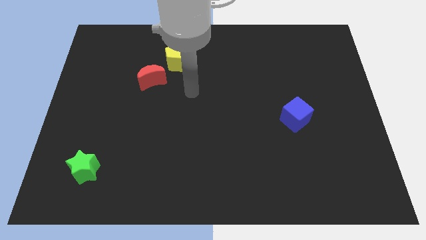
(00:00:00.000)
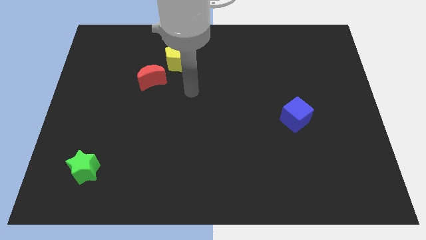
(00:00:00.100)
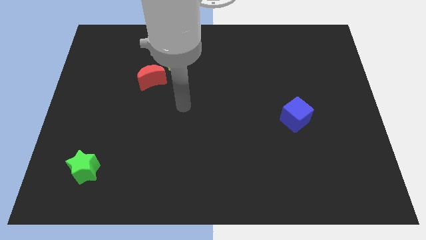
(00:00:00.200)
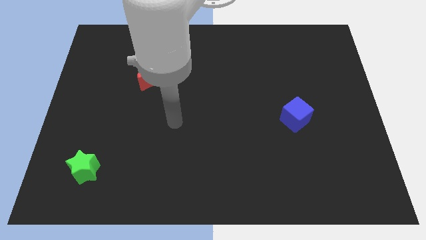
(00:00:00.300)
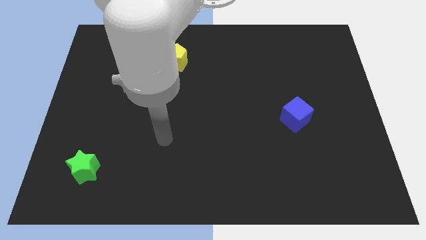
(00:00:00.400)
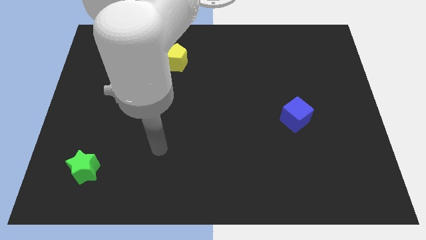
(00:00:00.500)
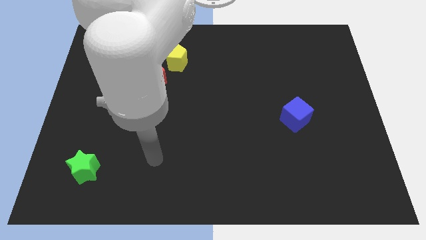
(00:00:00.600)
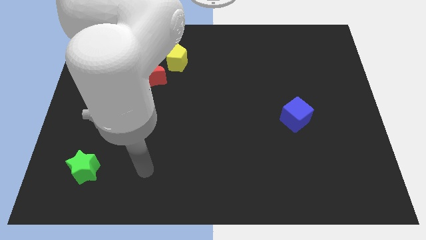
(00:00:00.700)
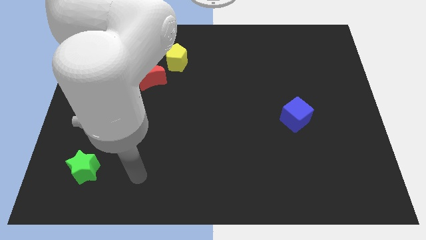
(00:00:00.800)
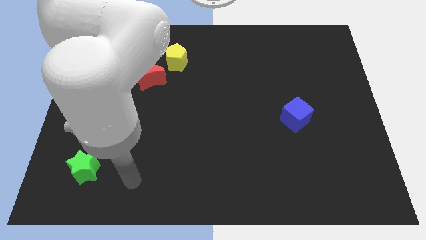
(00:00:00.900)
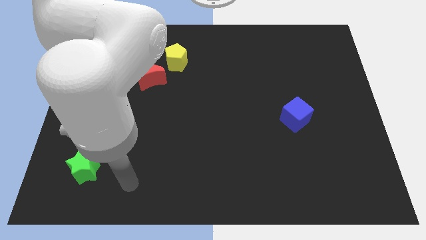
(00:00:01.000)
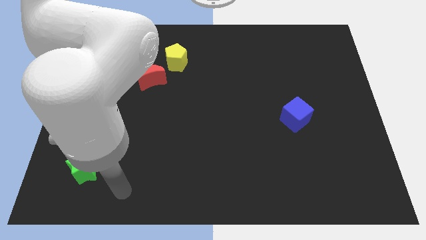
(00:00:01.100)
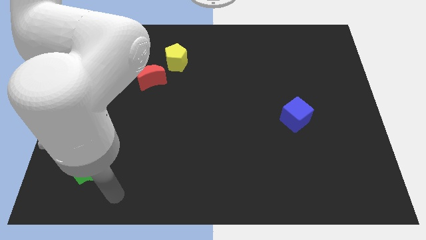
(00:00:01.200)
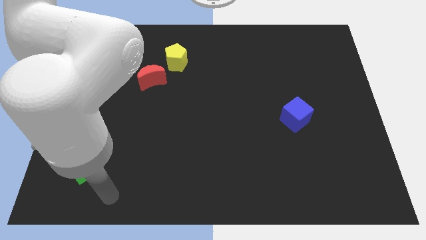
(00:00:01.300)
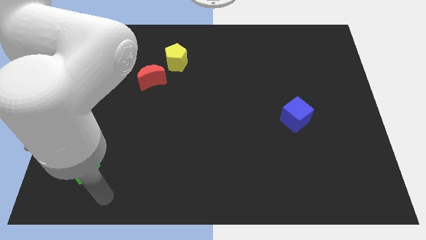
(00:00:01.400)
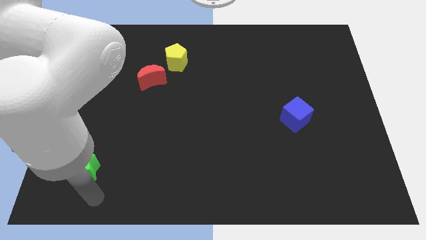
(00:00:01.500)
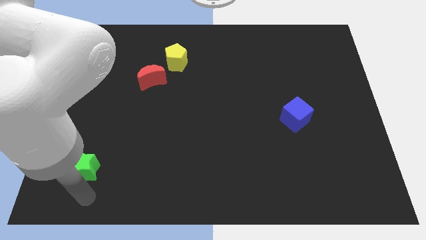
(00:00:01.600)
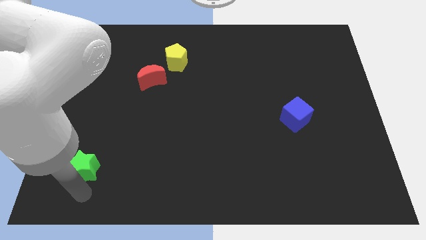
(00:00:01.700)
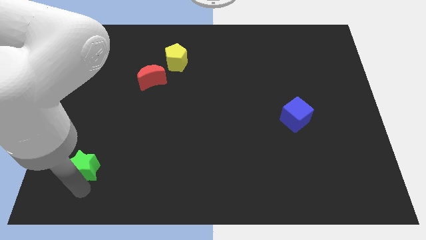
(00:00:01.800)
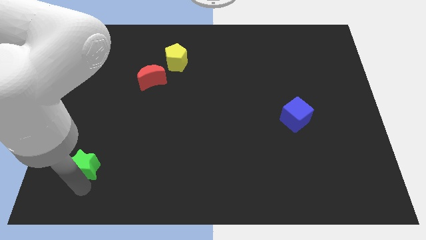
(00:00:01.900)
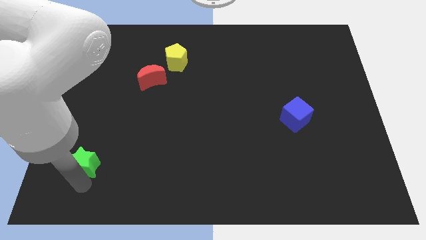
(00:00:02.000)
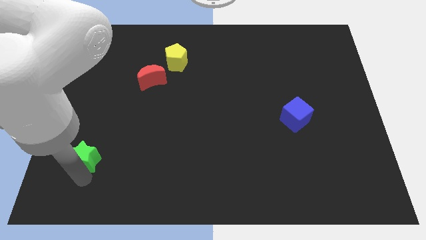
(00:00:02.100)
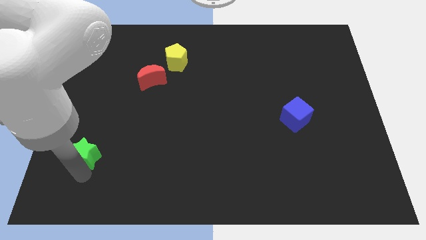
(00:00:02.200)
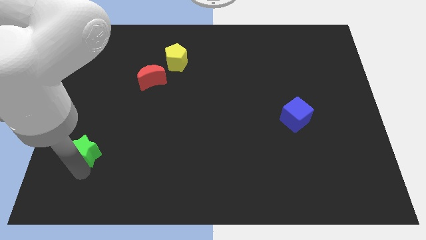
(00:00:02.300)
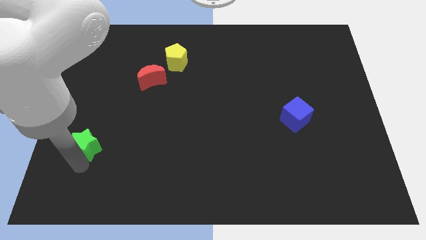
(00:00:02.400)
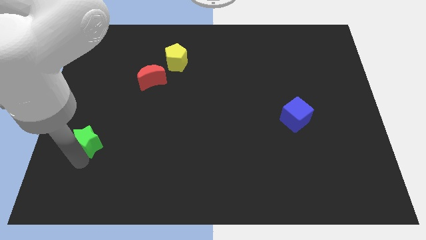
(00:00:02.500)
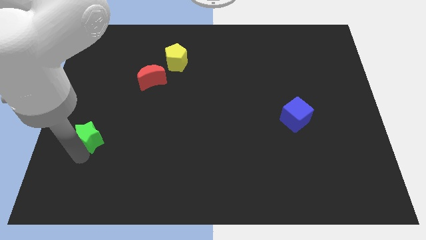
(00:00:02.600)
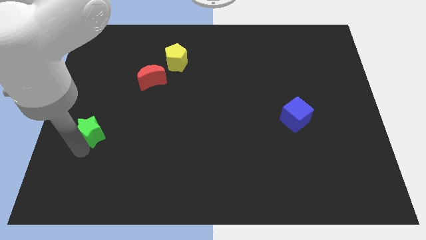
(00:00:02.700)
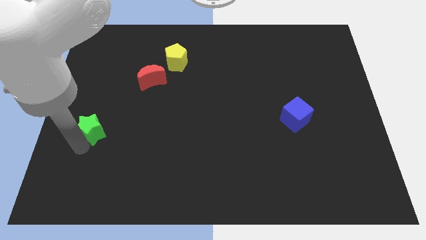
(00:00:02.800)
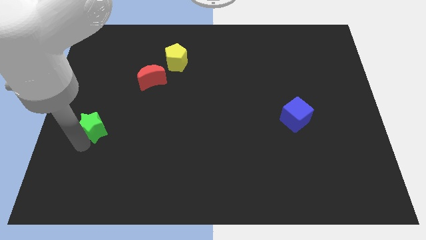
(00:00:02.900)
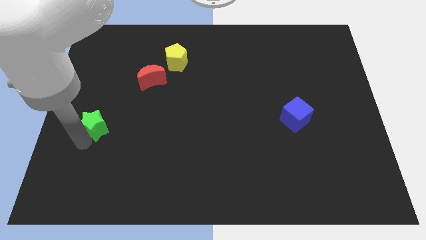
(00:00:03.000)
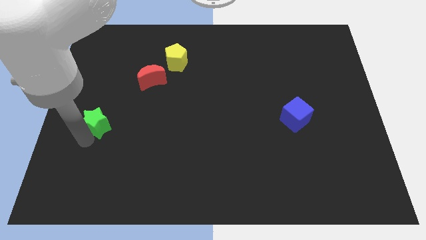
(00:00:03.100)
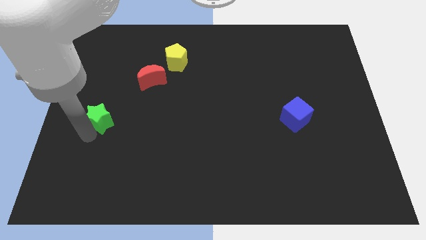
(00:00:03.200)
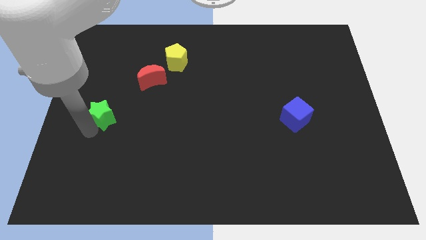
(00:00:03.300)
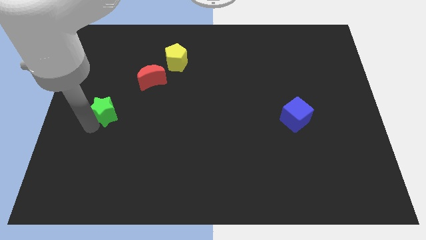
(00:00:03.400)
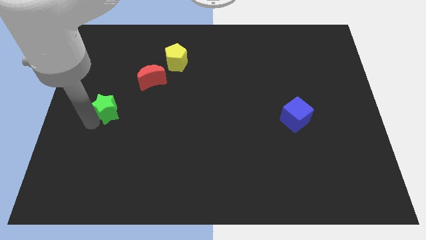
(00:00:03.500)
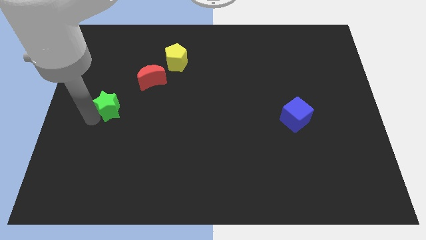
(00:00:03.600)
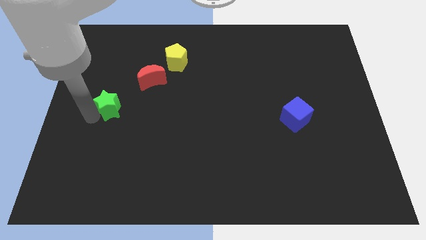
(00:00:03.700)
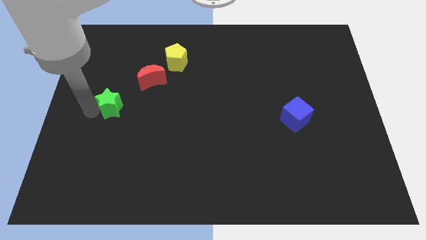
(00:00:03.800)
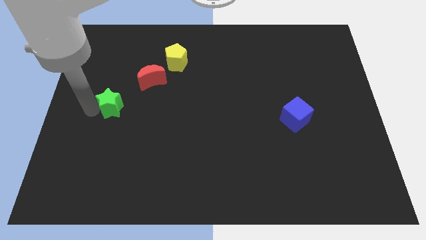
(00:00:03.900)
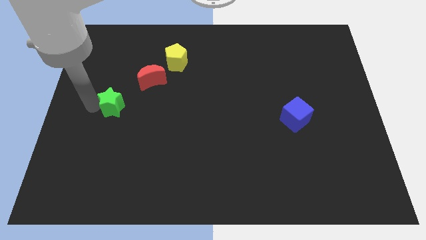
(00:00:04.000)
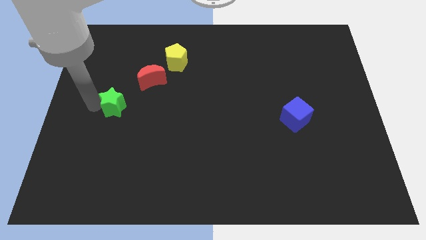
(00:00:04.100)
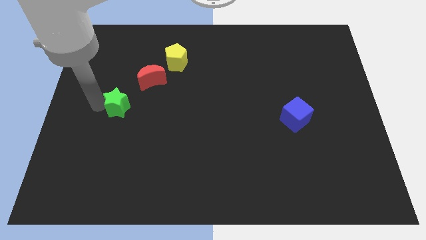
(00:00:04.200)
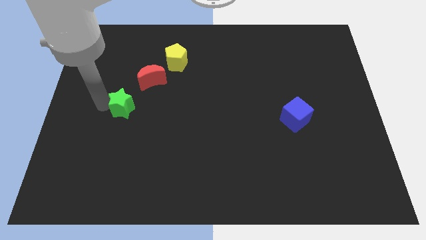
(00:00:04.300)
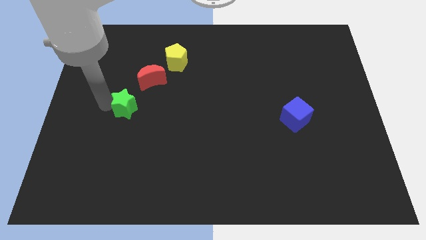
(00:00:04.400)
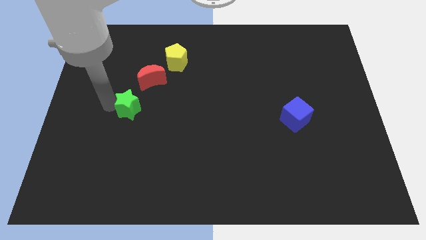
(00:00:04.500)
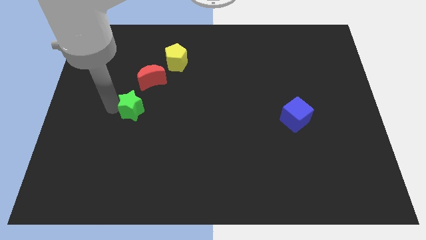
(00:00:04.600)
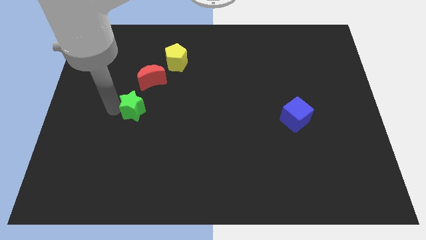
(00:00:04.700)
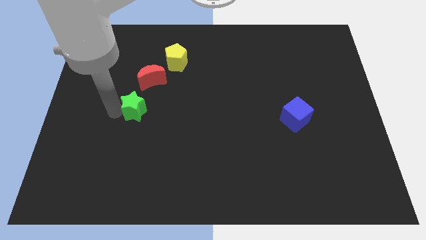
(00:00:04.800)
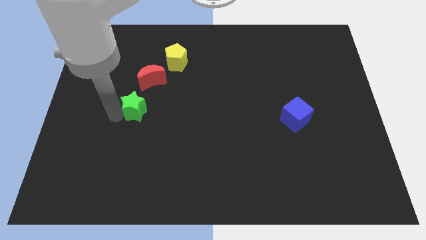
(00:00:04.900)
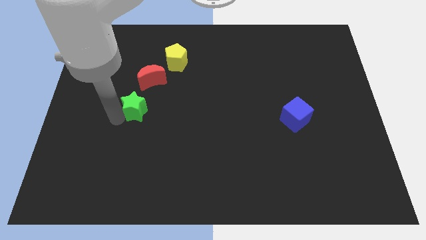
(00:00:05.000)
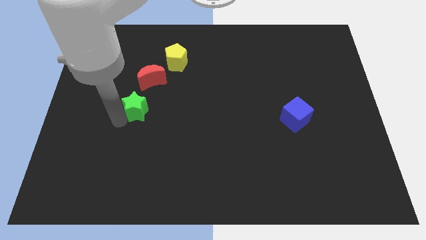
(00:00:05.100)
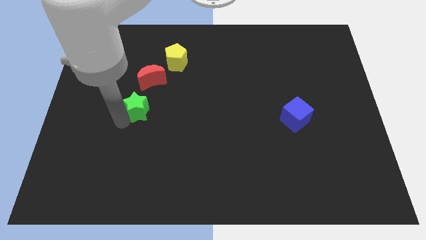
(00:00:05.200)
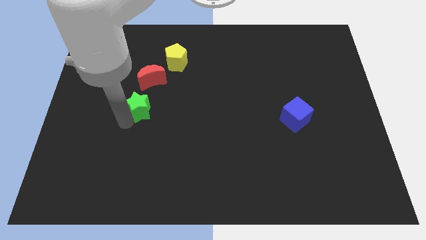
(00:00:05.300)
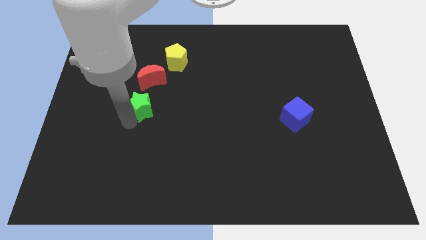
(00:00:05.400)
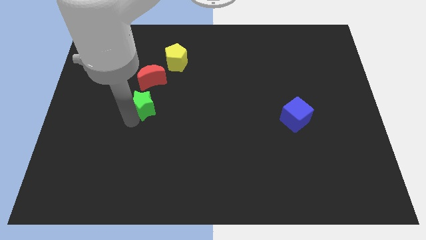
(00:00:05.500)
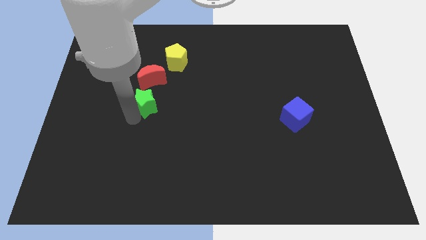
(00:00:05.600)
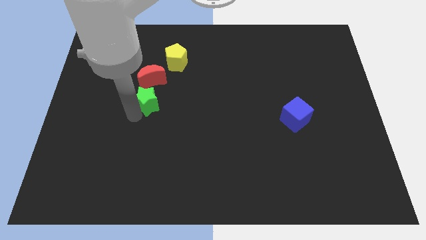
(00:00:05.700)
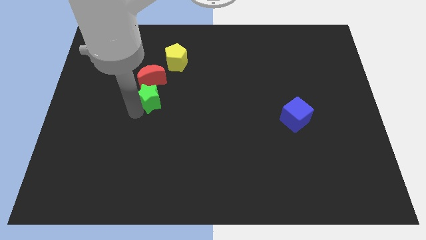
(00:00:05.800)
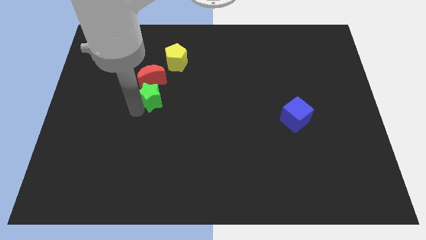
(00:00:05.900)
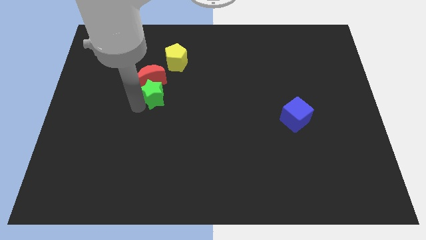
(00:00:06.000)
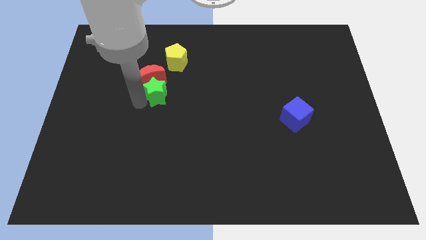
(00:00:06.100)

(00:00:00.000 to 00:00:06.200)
move the green star close to the red moon

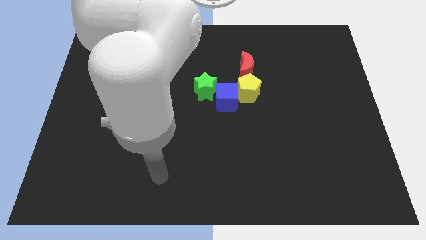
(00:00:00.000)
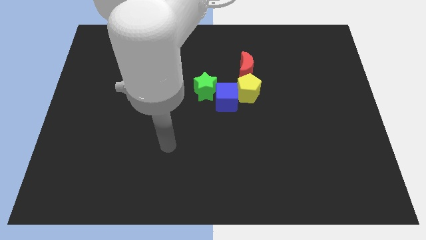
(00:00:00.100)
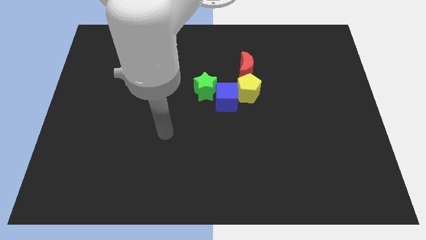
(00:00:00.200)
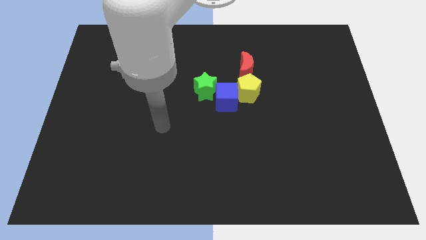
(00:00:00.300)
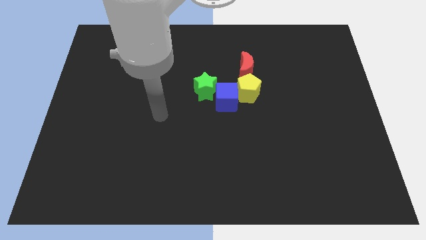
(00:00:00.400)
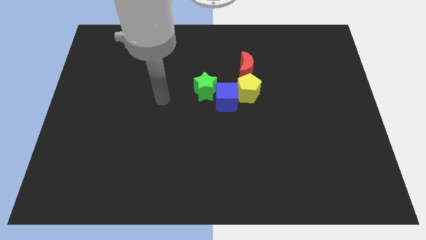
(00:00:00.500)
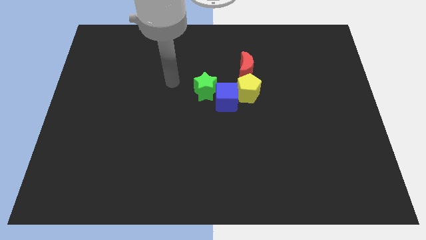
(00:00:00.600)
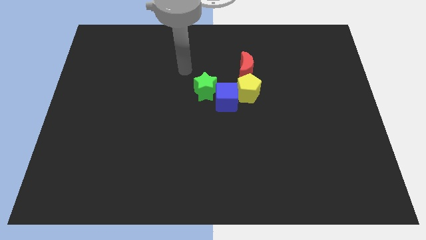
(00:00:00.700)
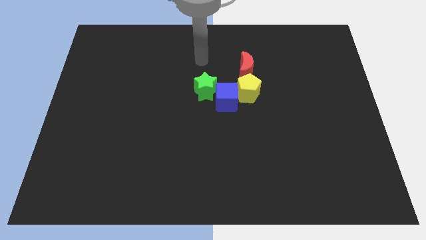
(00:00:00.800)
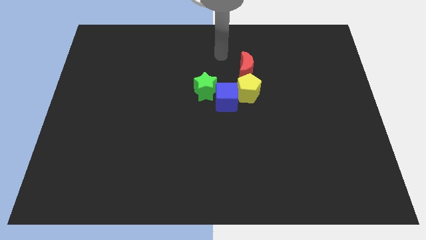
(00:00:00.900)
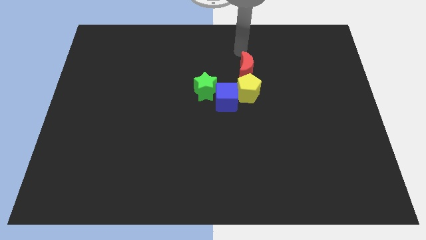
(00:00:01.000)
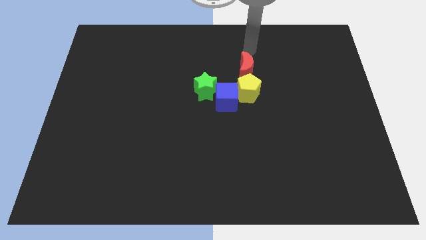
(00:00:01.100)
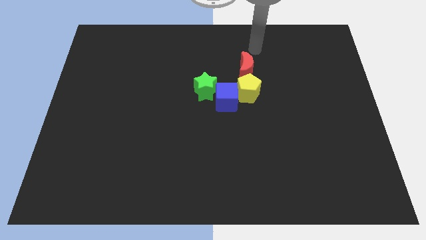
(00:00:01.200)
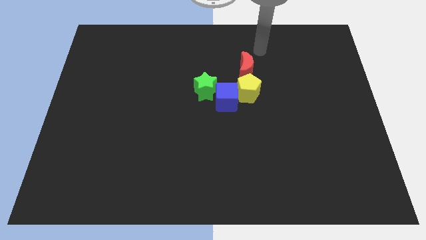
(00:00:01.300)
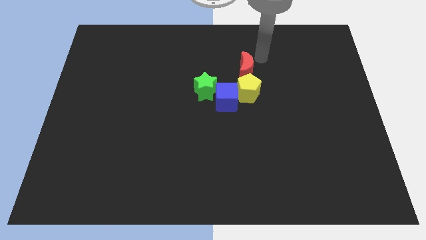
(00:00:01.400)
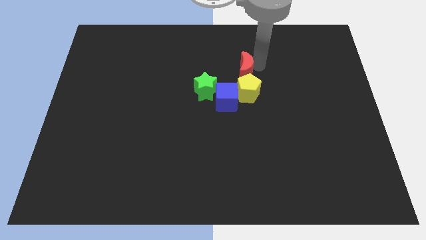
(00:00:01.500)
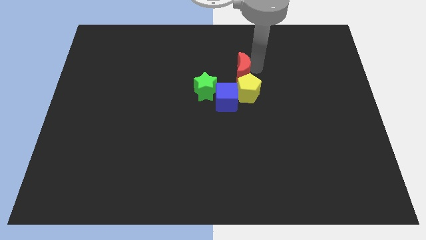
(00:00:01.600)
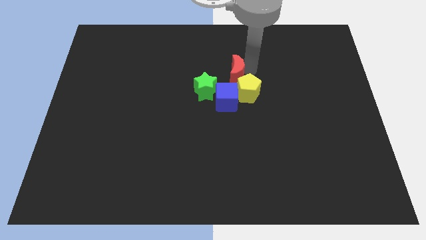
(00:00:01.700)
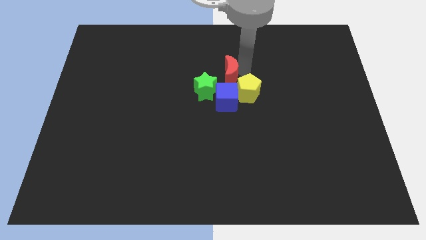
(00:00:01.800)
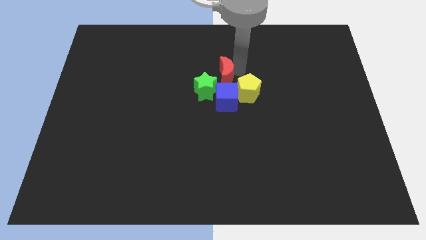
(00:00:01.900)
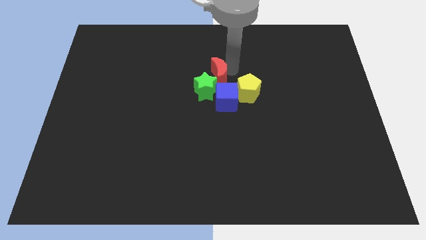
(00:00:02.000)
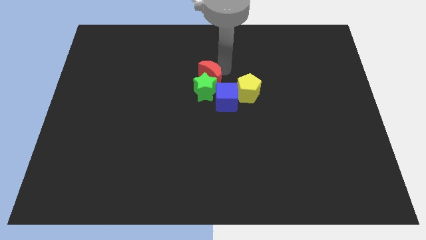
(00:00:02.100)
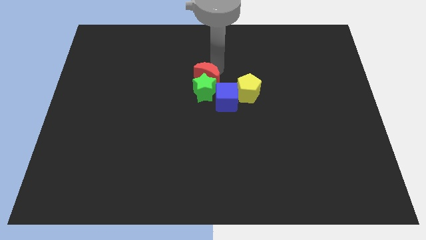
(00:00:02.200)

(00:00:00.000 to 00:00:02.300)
put the red block towards the star

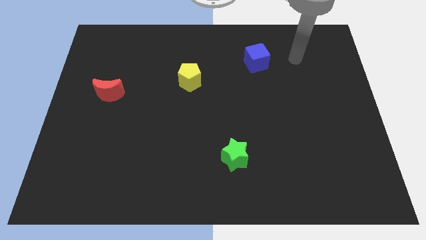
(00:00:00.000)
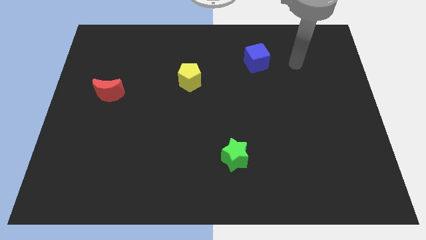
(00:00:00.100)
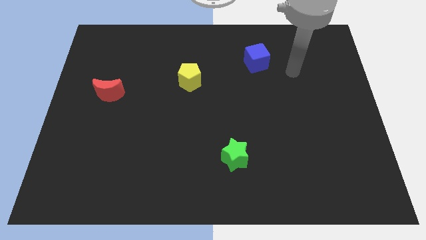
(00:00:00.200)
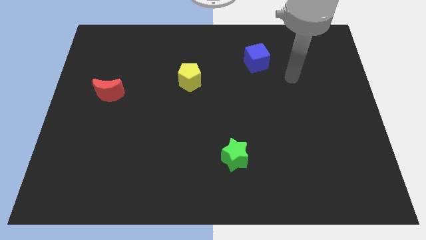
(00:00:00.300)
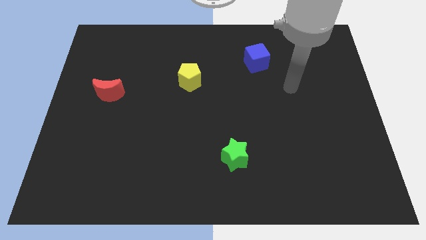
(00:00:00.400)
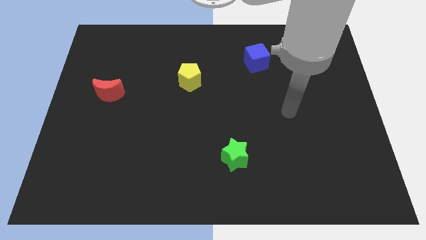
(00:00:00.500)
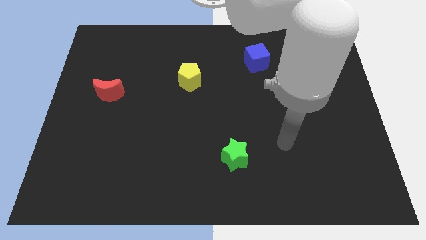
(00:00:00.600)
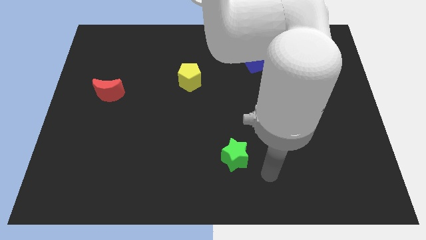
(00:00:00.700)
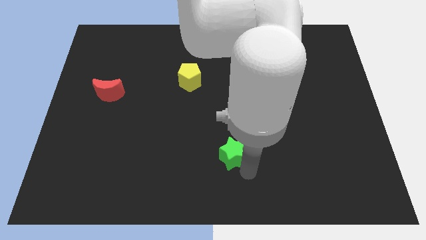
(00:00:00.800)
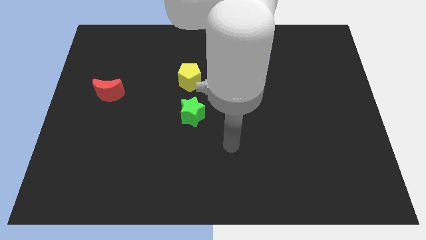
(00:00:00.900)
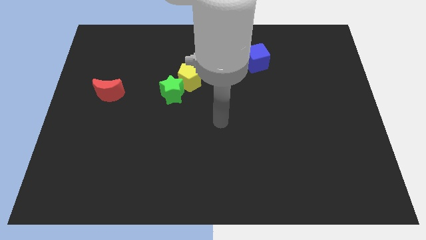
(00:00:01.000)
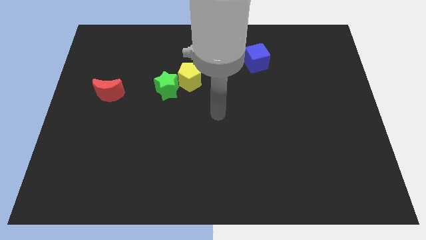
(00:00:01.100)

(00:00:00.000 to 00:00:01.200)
push the green star close to the yellow pentagon
